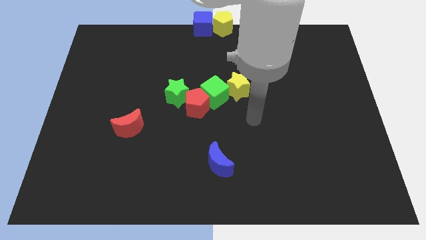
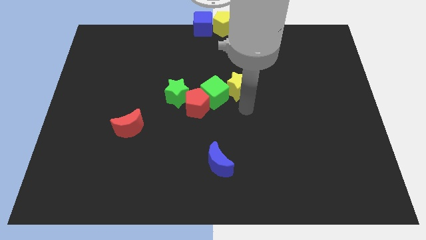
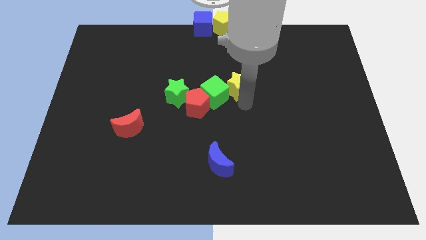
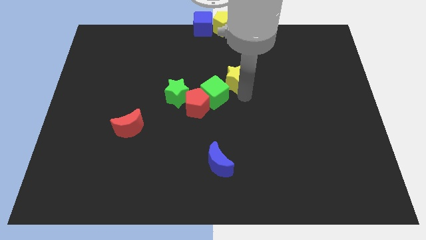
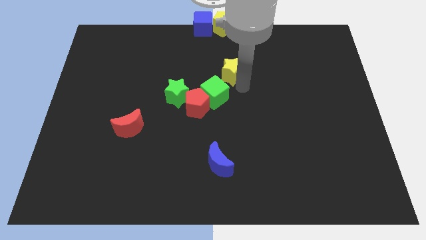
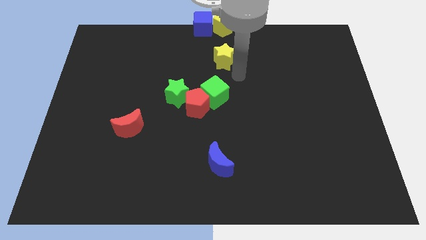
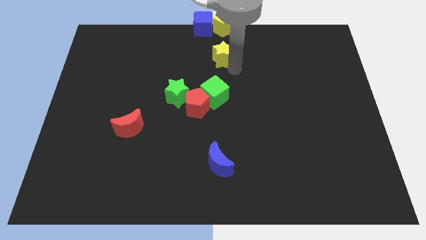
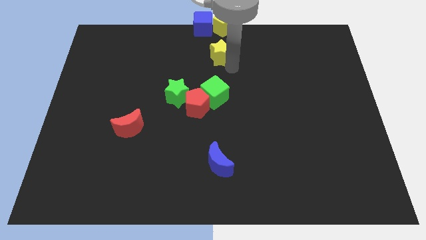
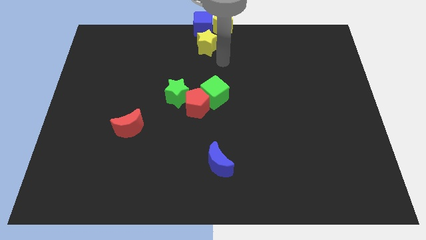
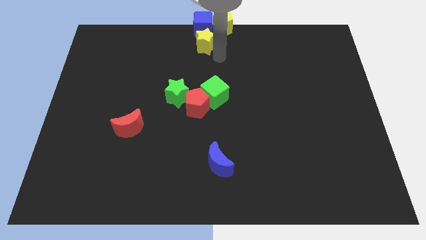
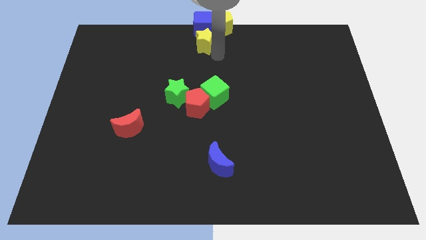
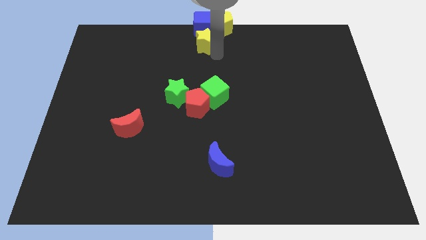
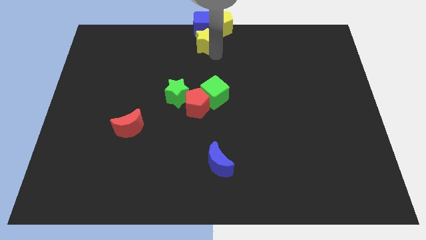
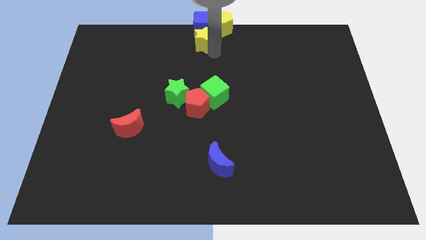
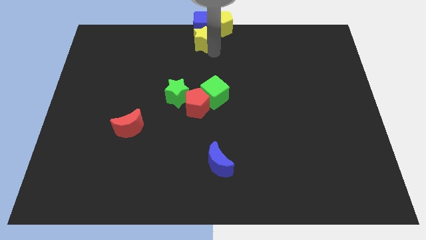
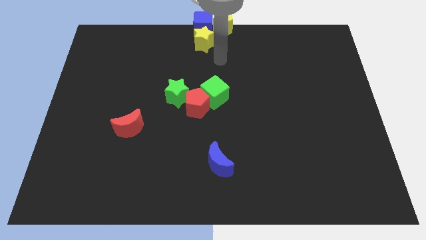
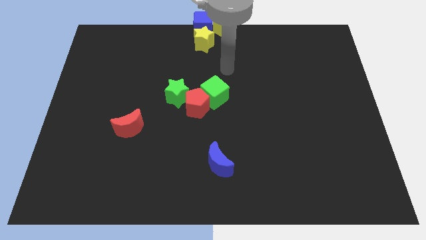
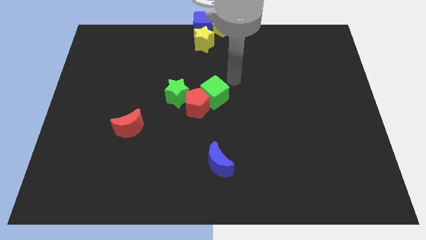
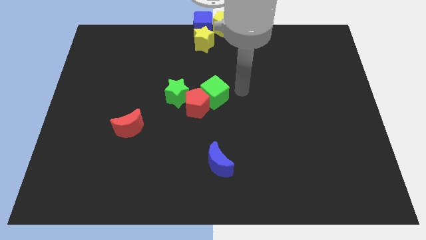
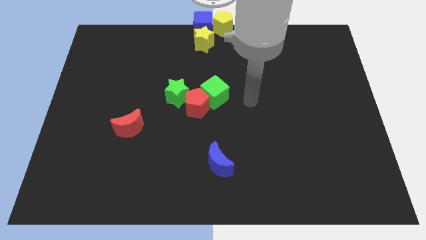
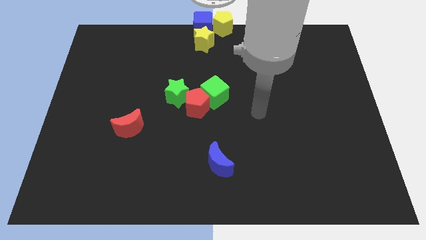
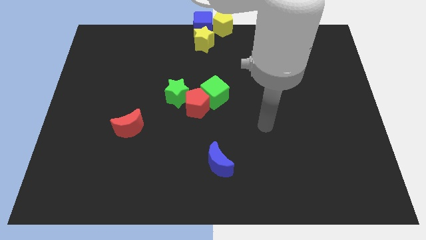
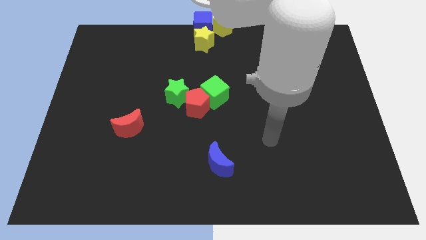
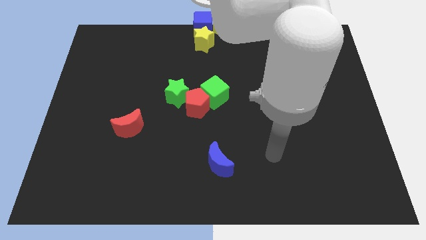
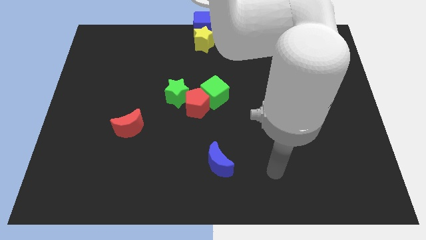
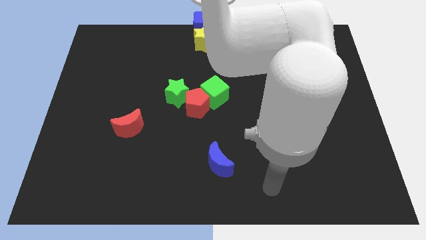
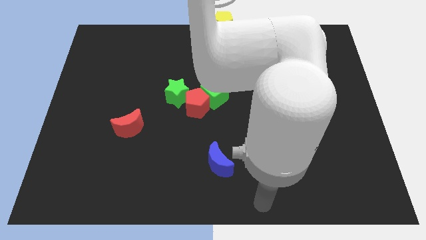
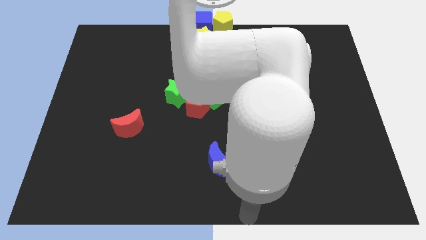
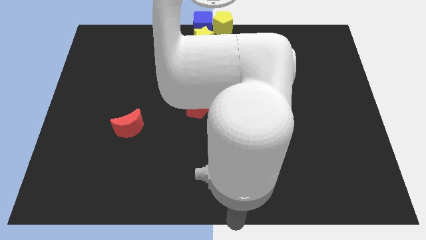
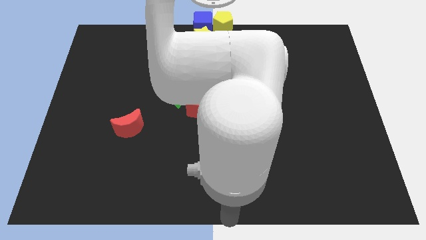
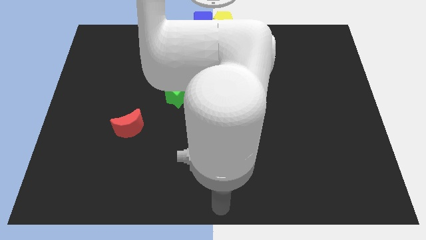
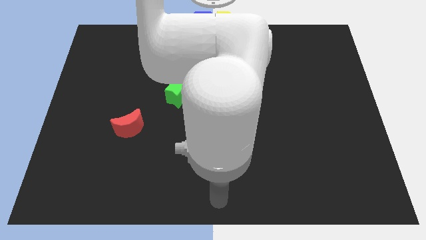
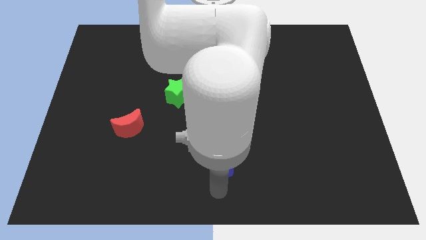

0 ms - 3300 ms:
put the yellow star at the bottom of the blue cube

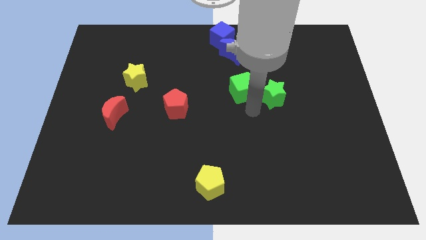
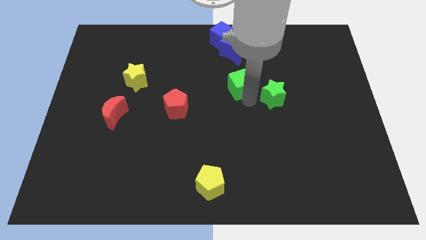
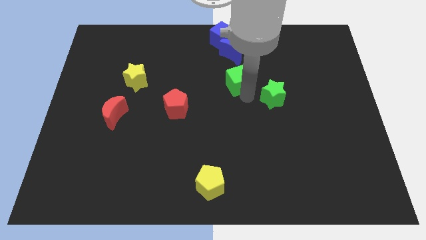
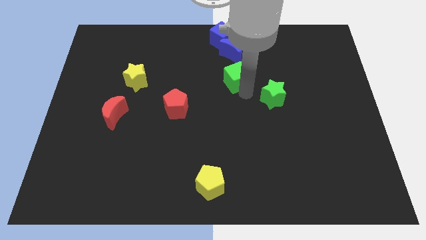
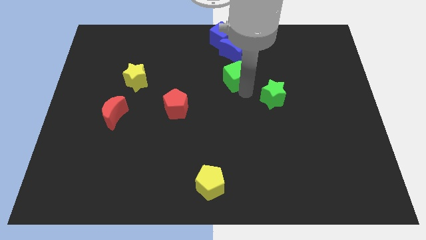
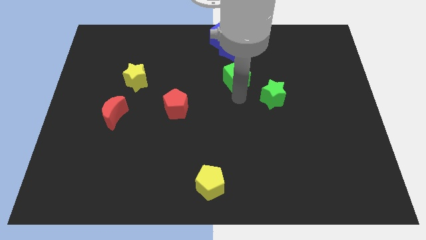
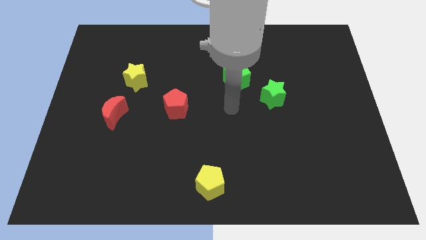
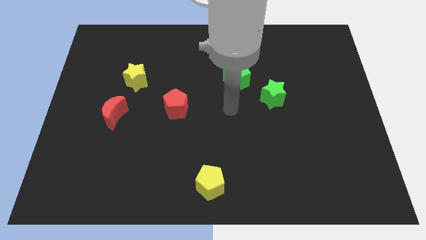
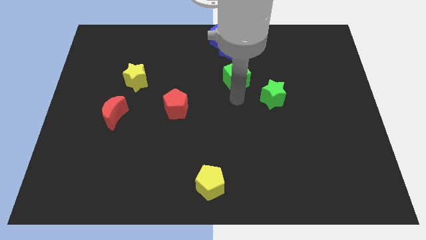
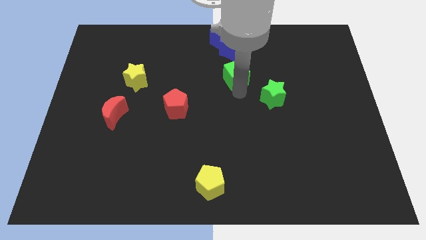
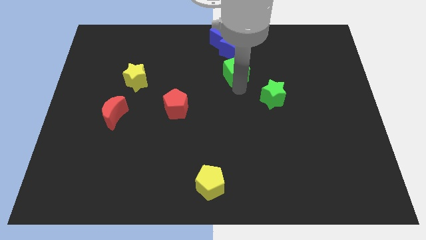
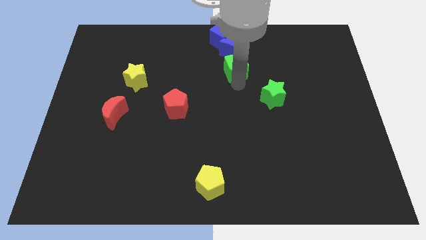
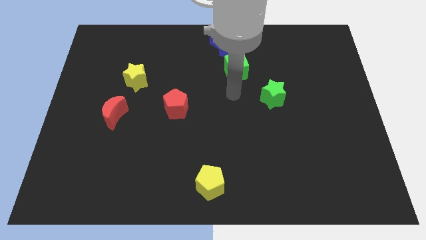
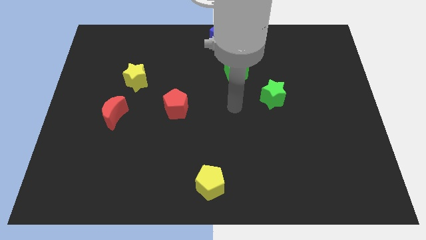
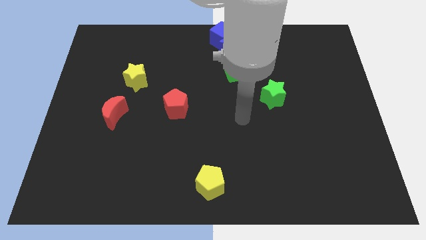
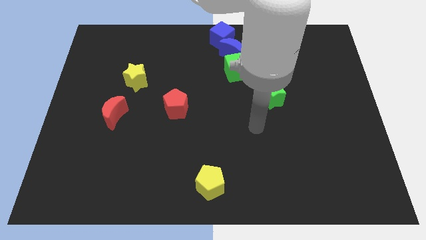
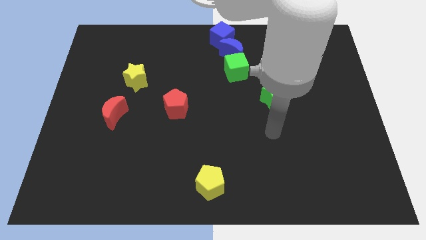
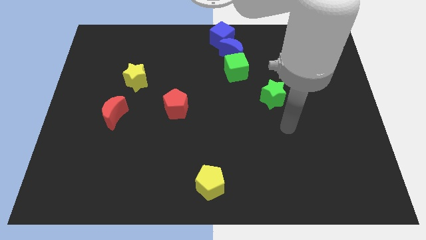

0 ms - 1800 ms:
place green cube below the blue moon

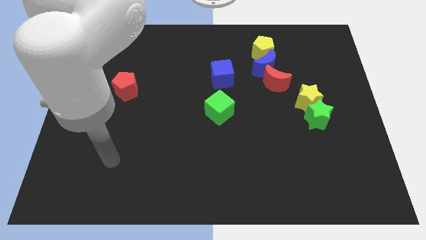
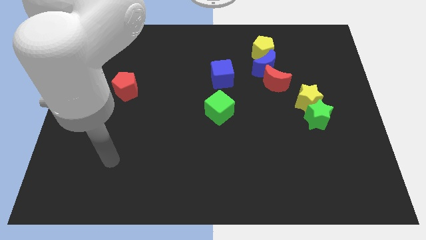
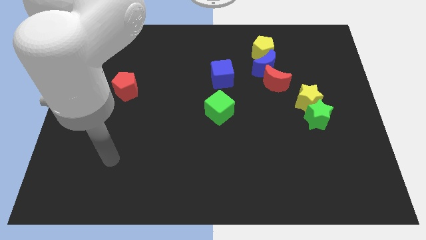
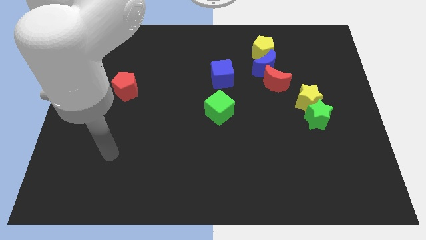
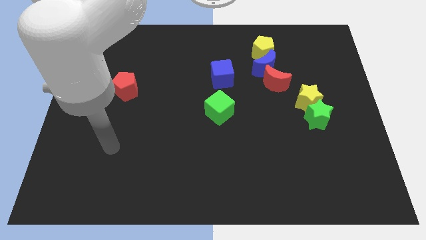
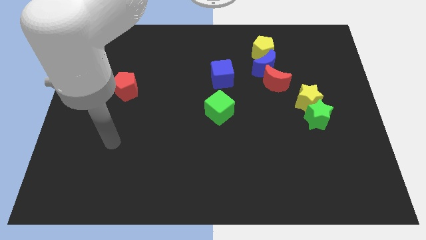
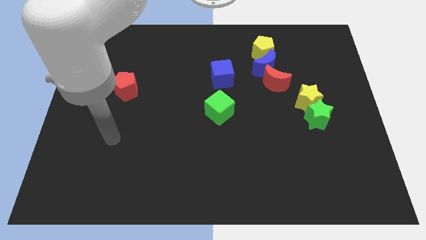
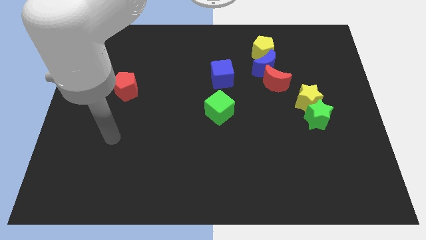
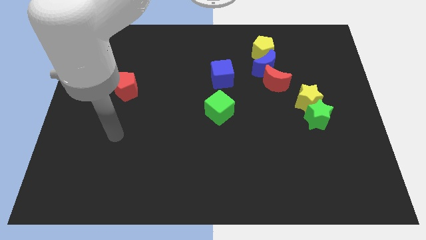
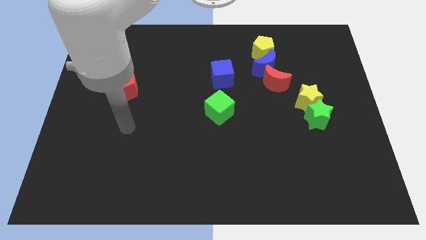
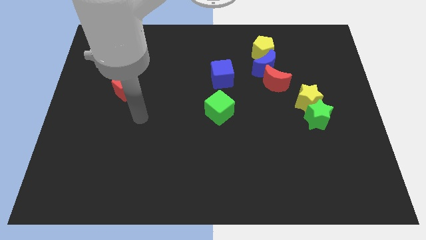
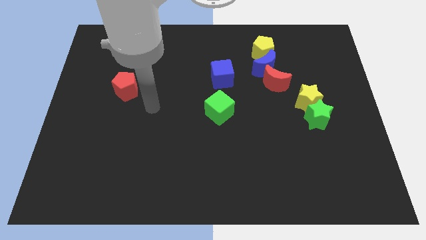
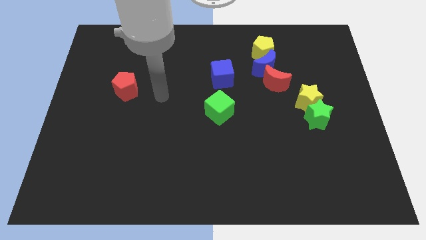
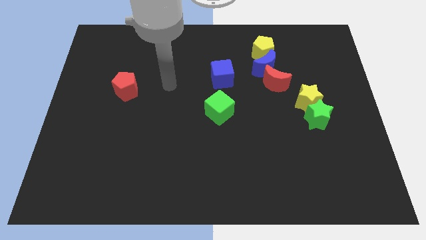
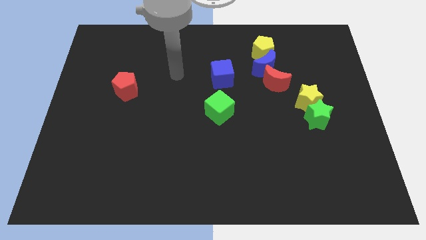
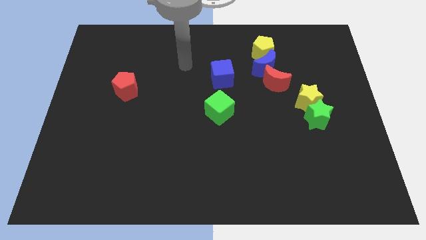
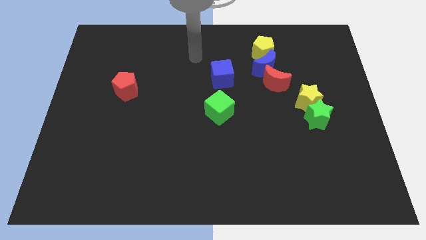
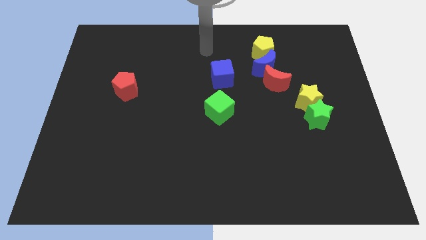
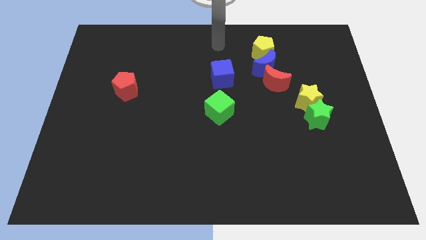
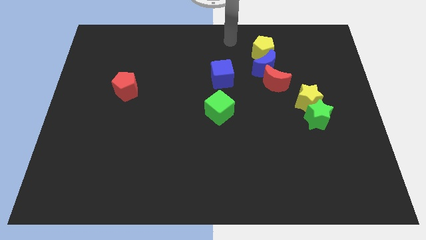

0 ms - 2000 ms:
point your arm at the top center of the board

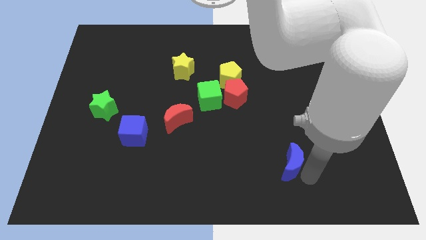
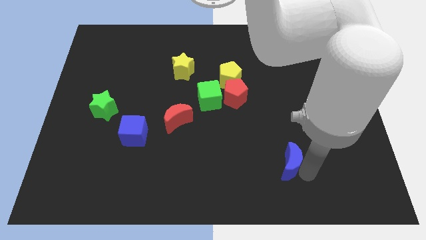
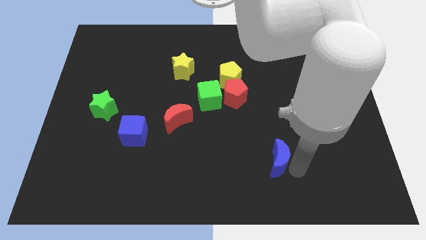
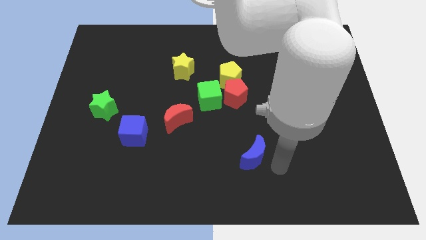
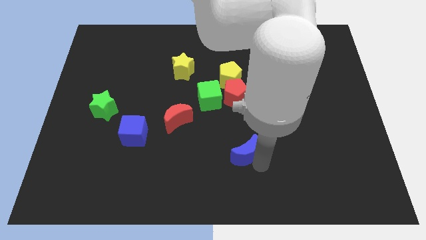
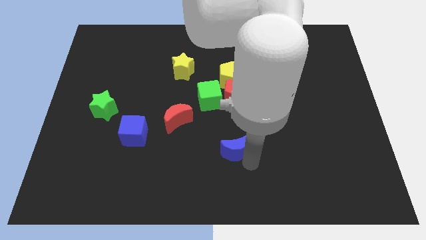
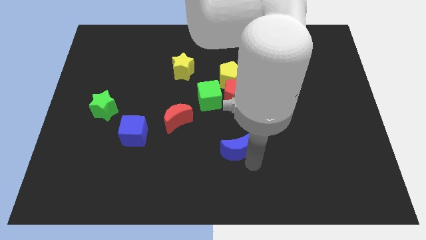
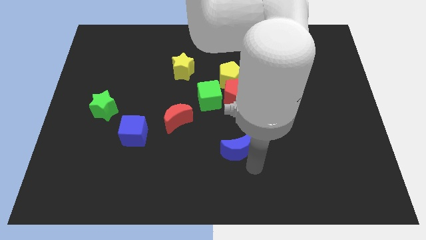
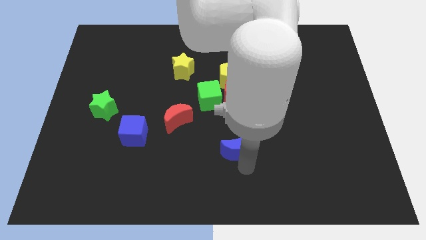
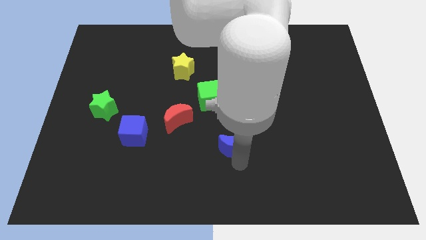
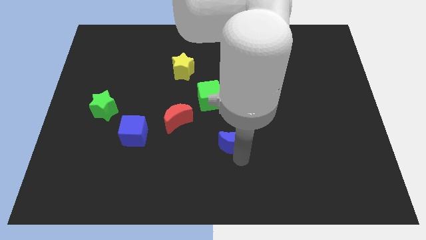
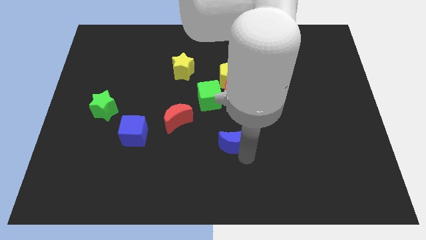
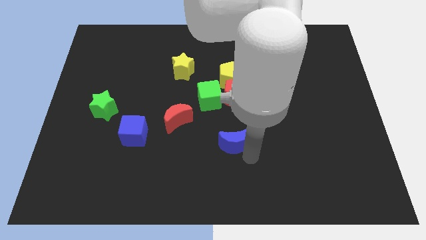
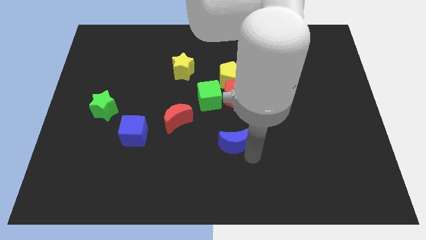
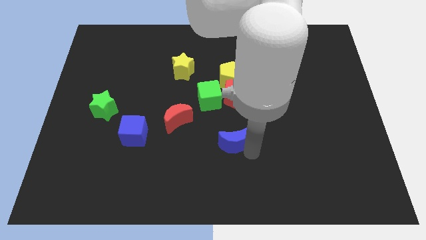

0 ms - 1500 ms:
move the blue crescent towards the top left

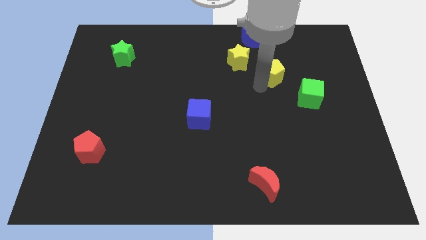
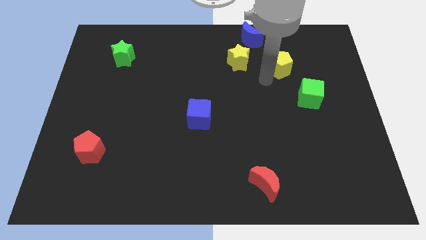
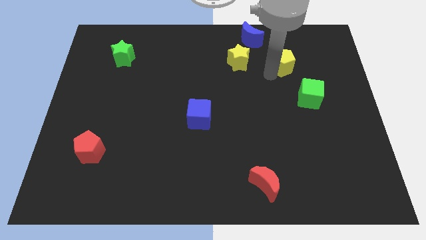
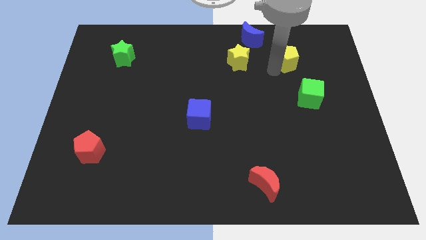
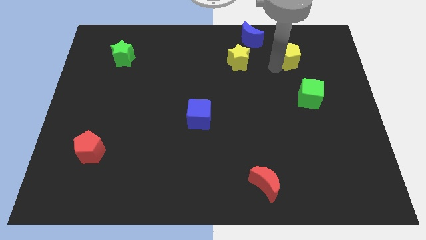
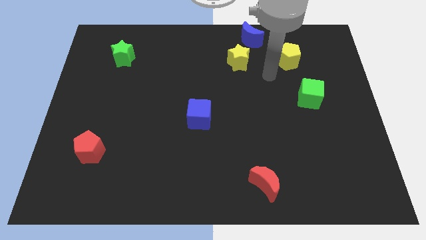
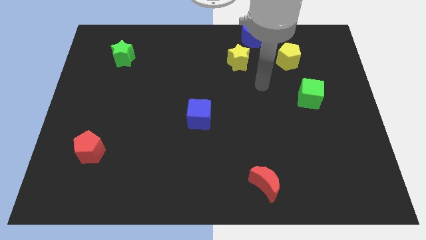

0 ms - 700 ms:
push the yellow pentagon towards the top right
